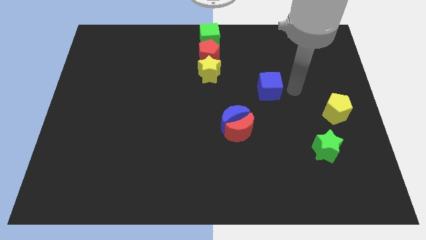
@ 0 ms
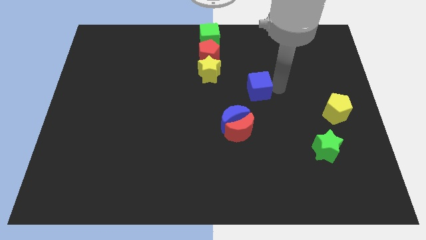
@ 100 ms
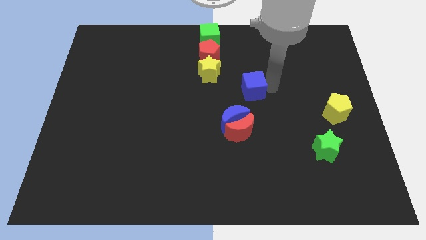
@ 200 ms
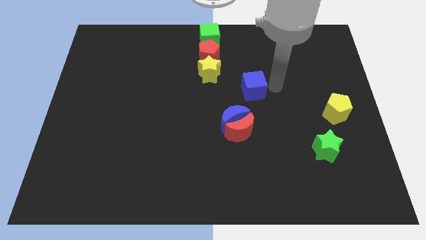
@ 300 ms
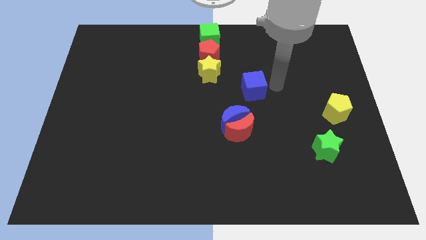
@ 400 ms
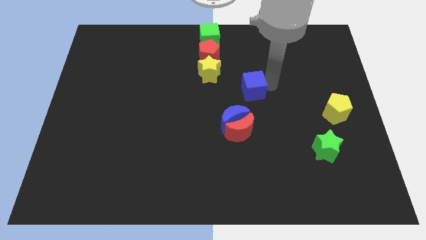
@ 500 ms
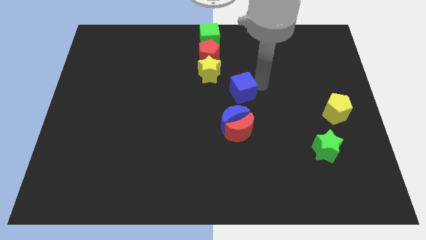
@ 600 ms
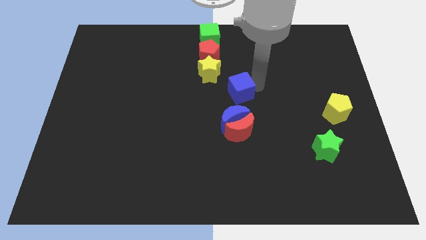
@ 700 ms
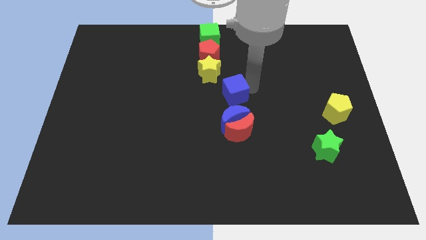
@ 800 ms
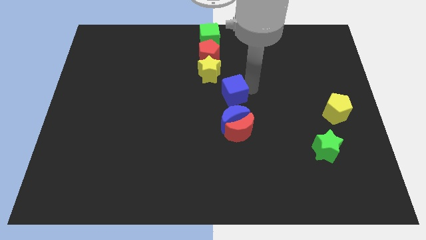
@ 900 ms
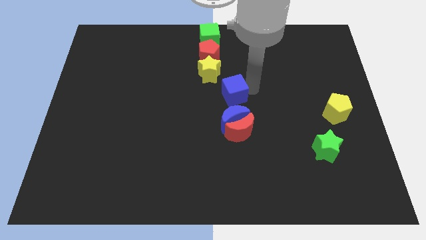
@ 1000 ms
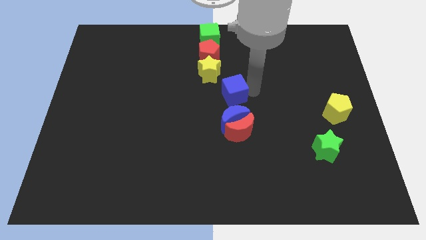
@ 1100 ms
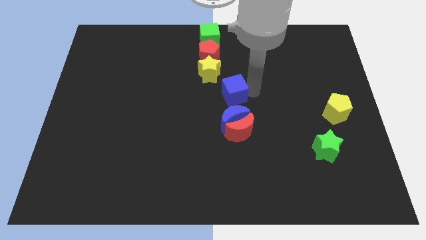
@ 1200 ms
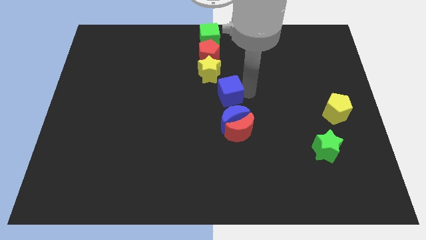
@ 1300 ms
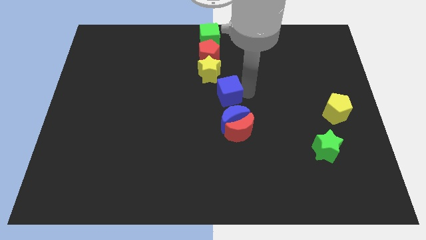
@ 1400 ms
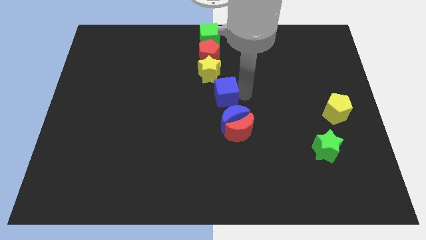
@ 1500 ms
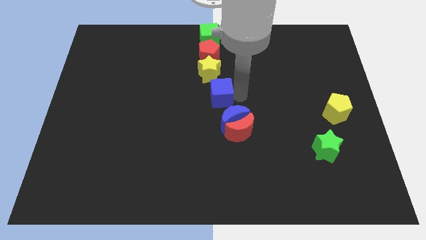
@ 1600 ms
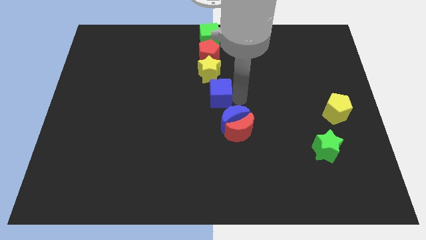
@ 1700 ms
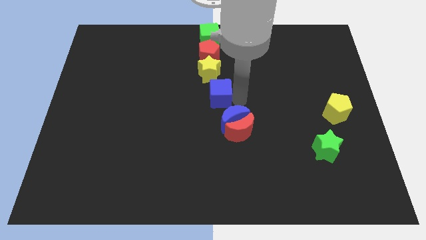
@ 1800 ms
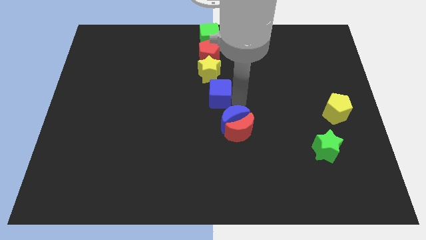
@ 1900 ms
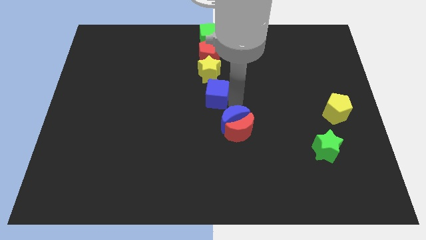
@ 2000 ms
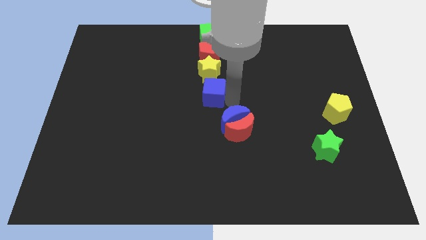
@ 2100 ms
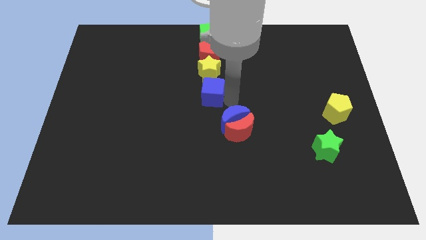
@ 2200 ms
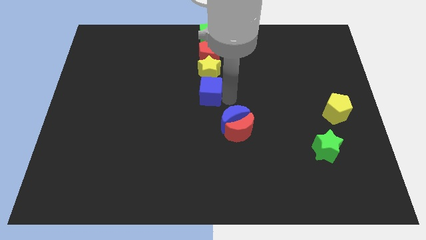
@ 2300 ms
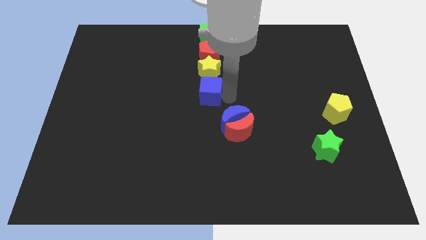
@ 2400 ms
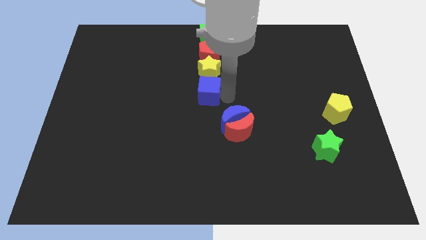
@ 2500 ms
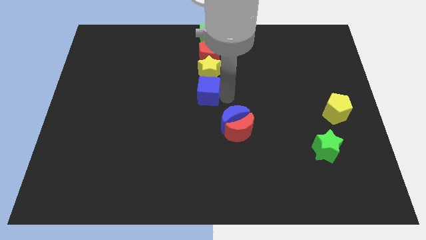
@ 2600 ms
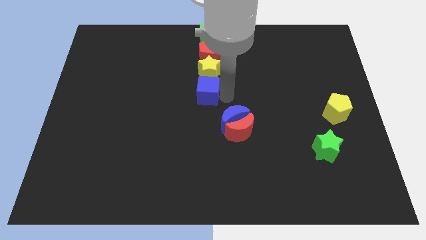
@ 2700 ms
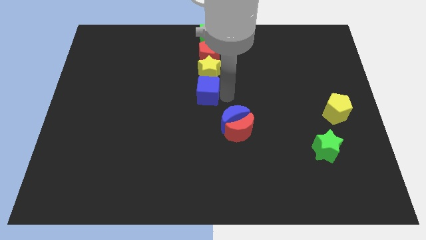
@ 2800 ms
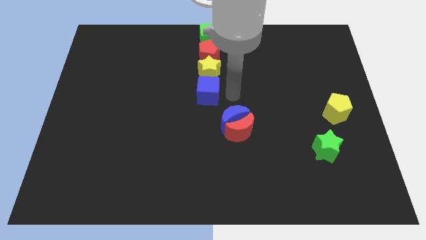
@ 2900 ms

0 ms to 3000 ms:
move the blue cube to the bottom side of the yellow star

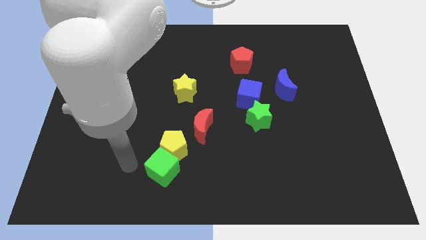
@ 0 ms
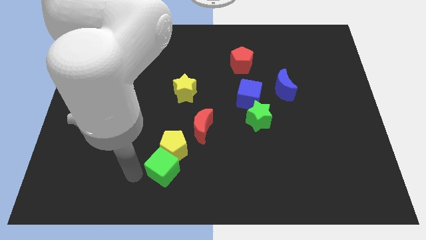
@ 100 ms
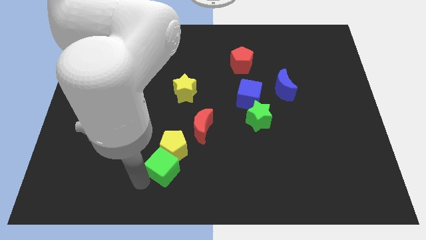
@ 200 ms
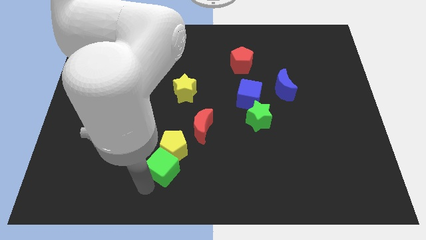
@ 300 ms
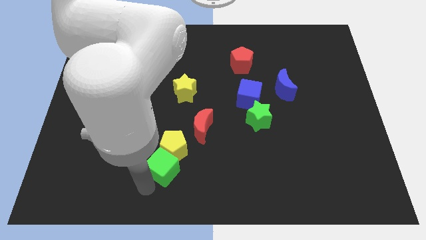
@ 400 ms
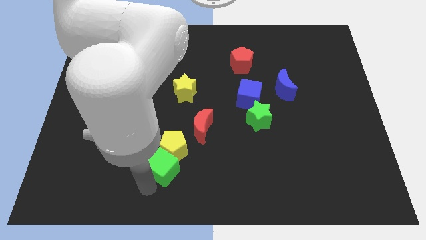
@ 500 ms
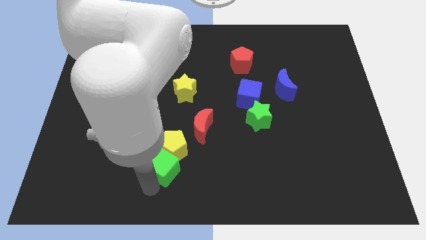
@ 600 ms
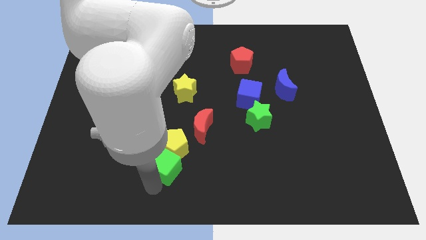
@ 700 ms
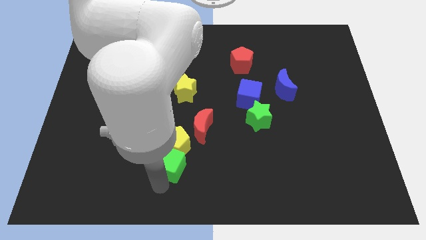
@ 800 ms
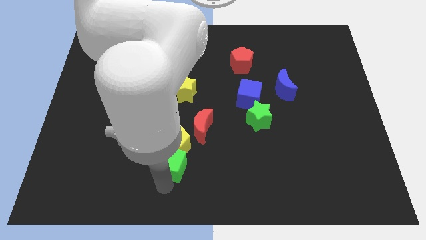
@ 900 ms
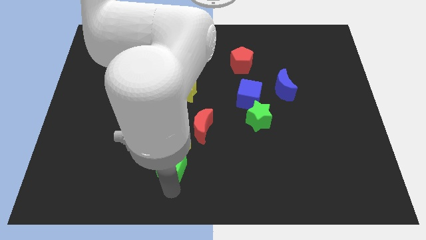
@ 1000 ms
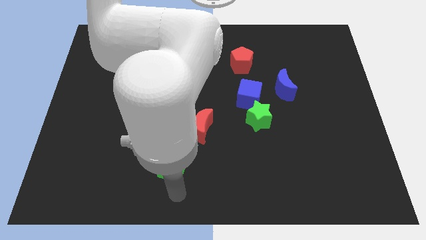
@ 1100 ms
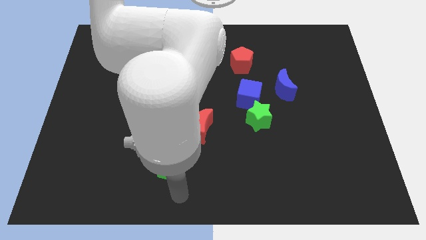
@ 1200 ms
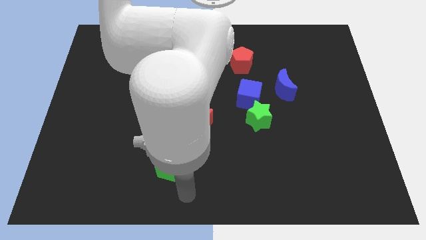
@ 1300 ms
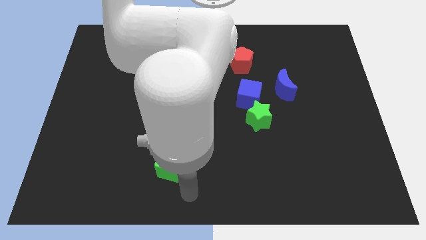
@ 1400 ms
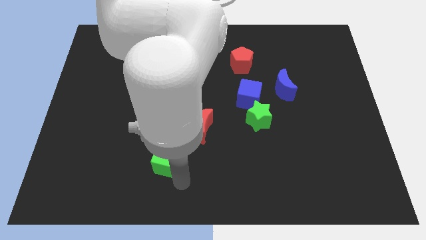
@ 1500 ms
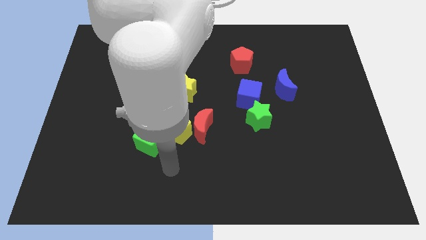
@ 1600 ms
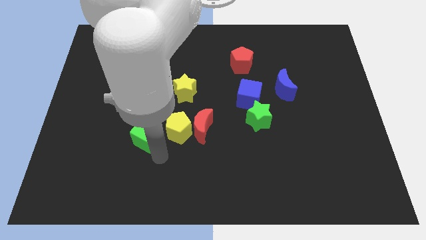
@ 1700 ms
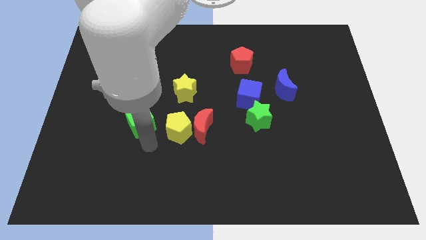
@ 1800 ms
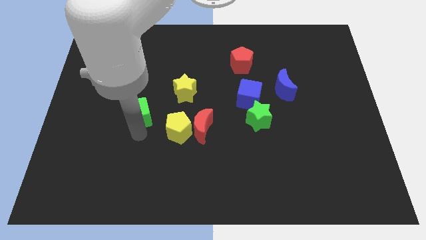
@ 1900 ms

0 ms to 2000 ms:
separate the green cube from the yellow pentagon

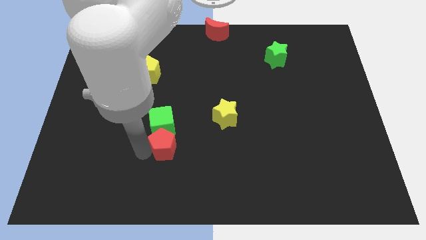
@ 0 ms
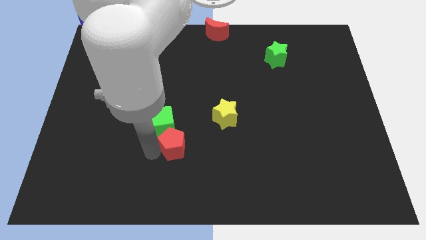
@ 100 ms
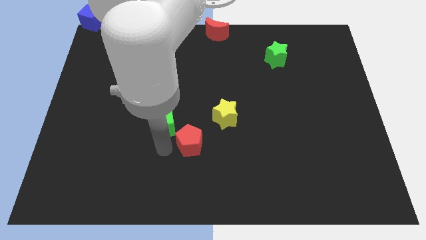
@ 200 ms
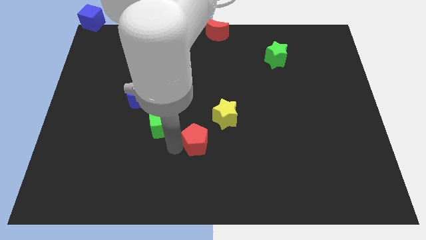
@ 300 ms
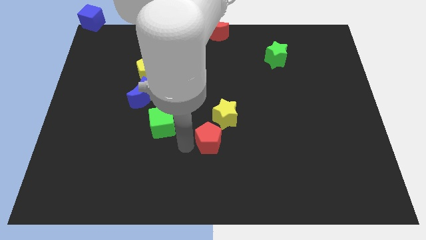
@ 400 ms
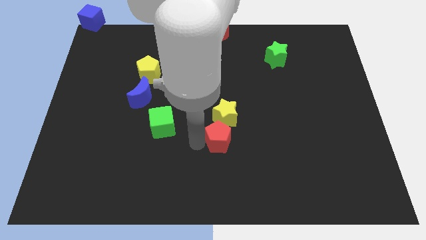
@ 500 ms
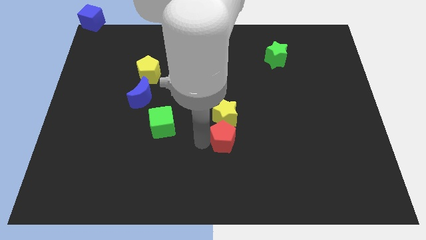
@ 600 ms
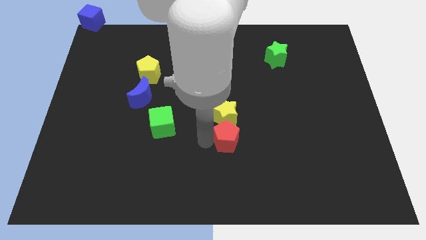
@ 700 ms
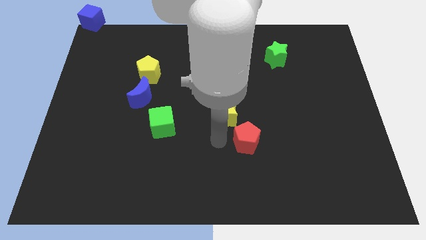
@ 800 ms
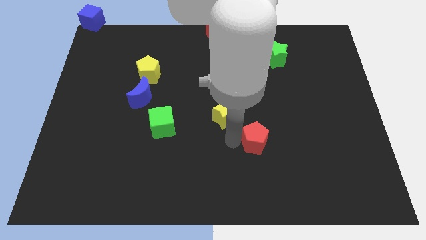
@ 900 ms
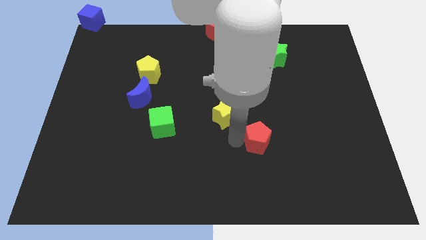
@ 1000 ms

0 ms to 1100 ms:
separate red pentagon from green cube

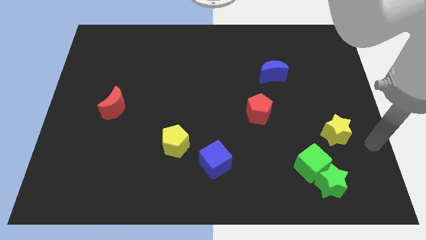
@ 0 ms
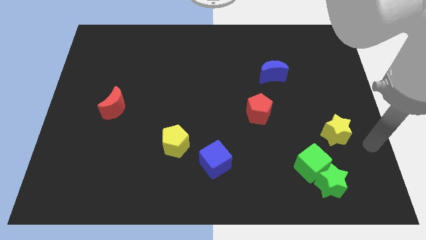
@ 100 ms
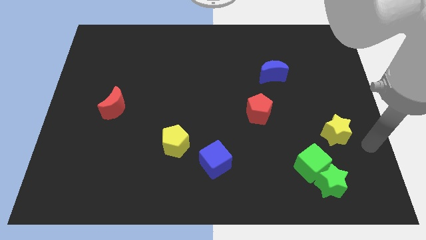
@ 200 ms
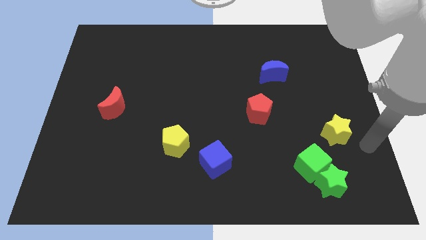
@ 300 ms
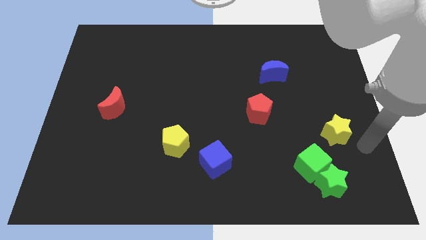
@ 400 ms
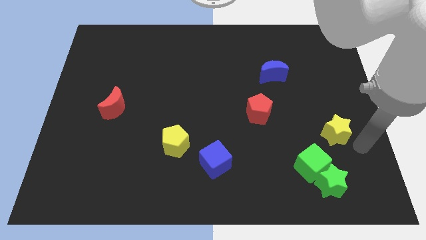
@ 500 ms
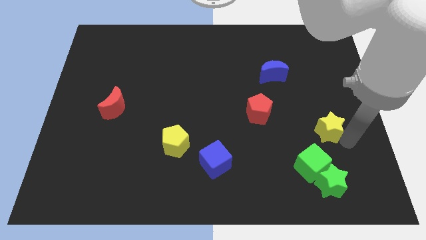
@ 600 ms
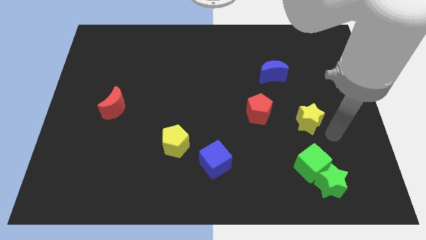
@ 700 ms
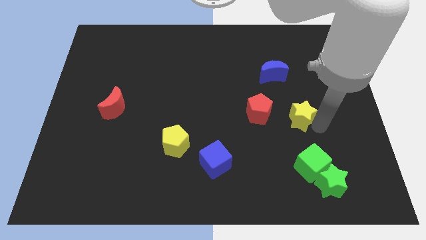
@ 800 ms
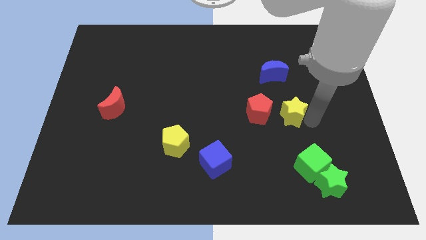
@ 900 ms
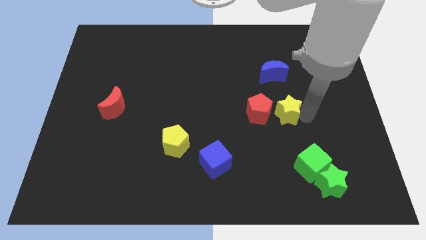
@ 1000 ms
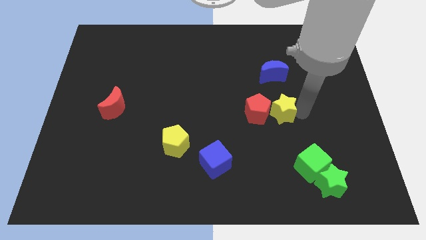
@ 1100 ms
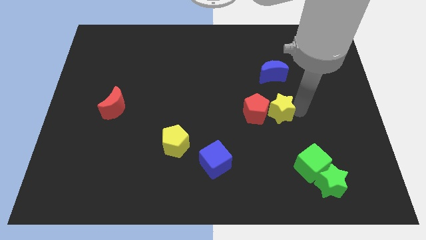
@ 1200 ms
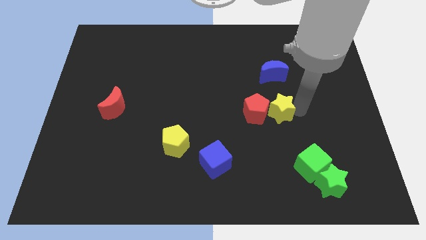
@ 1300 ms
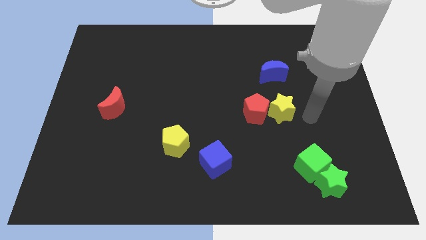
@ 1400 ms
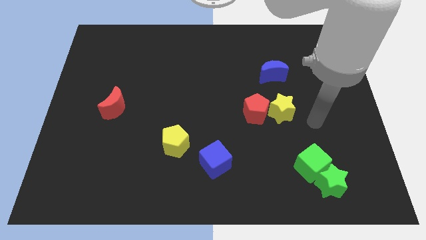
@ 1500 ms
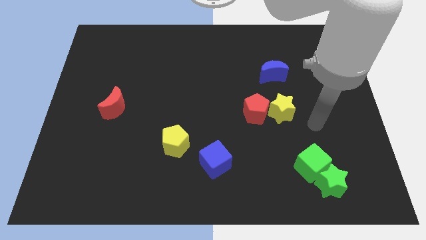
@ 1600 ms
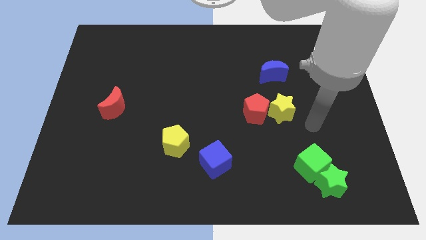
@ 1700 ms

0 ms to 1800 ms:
move the yellow star into the red pentagon

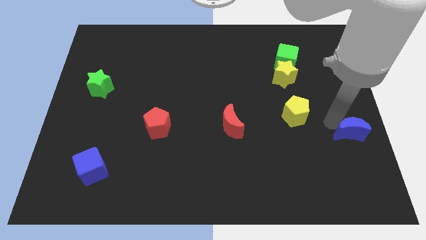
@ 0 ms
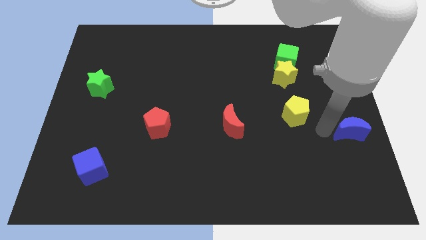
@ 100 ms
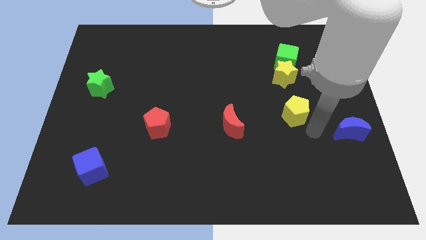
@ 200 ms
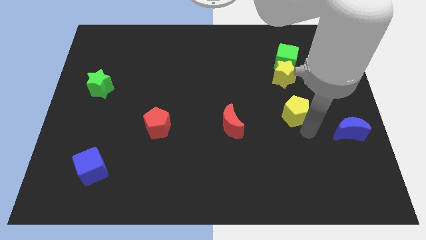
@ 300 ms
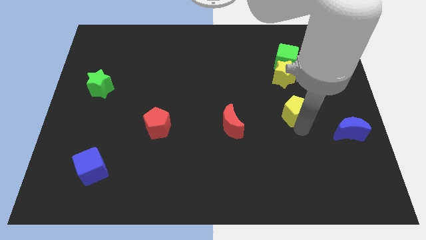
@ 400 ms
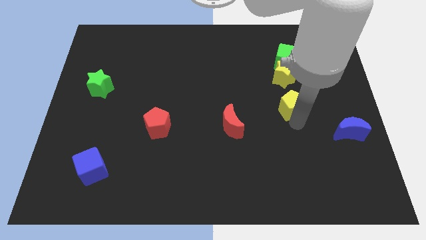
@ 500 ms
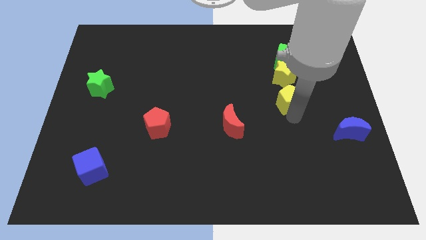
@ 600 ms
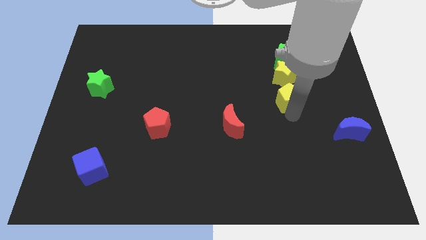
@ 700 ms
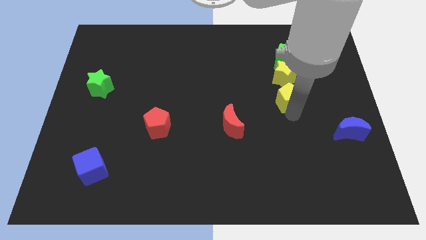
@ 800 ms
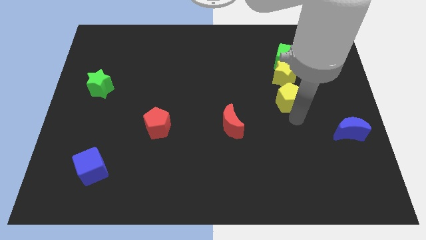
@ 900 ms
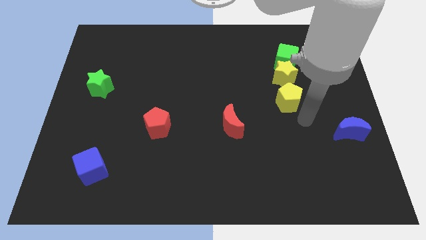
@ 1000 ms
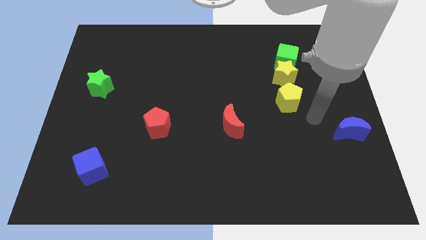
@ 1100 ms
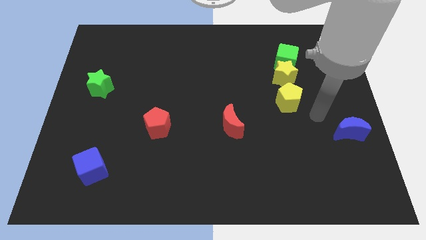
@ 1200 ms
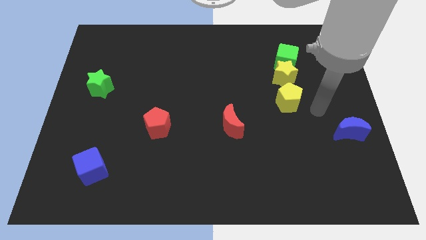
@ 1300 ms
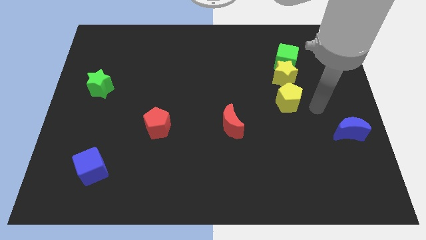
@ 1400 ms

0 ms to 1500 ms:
push the yellow pentagon into the yellow star
